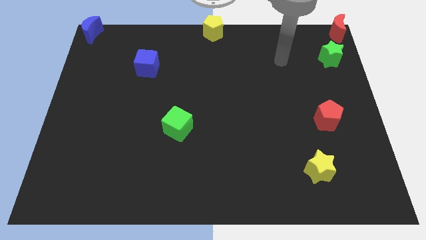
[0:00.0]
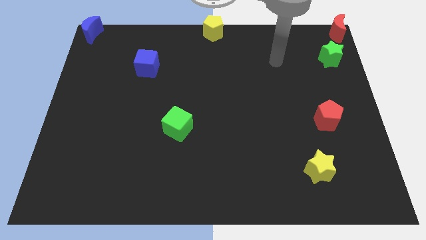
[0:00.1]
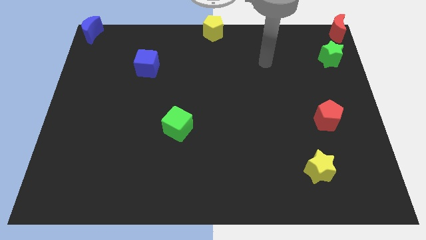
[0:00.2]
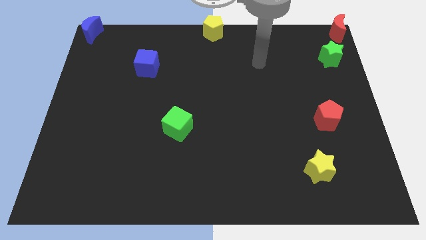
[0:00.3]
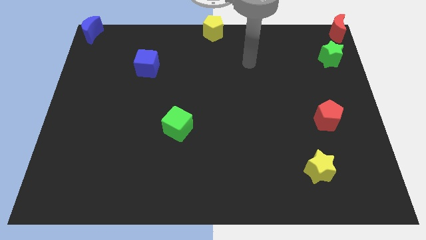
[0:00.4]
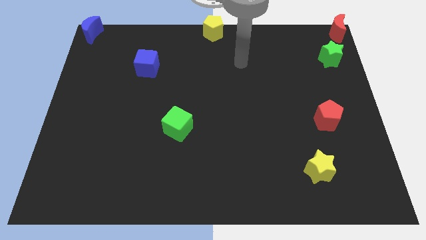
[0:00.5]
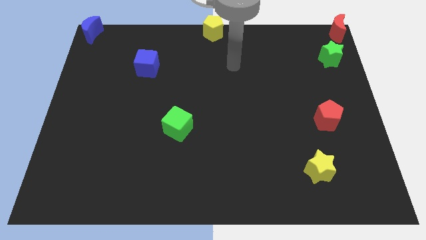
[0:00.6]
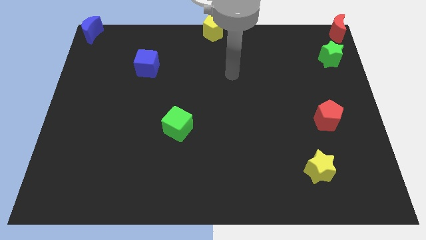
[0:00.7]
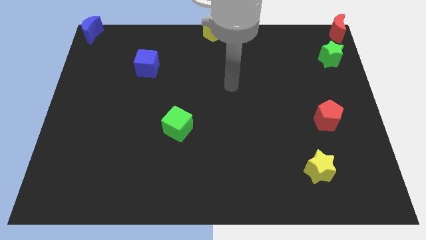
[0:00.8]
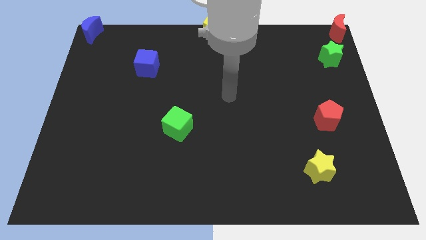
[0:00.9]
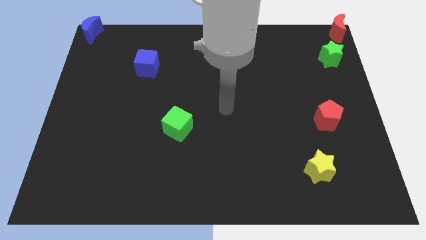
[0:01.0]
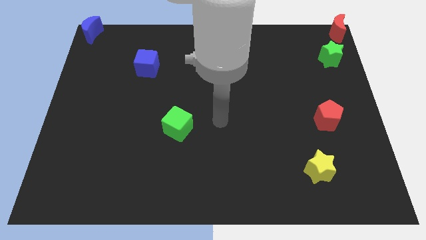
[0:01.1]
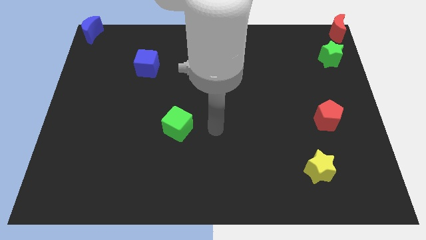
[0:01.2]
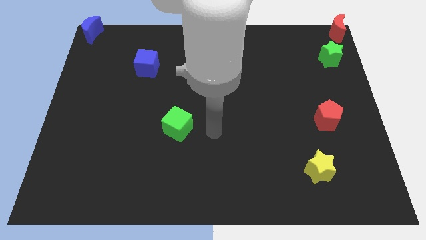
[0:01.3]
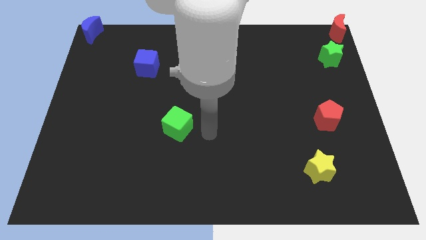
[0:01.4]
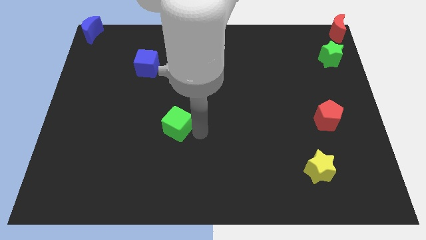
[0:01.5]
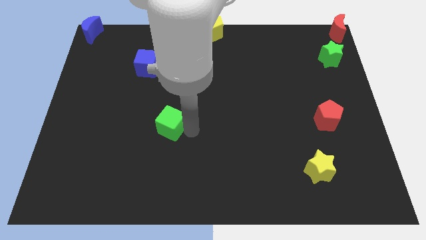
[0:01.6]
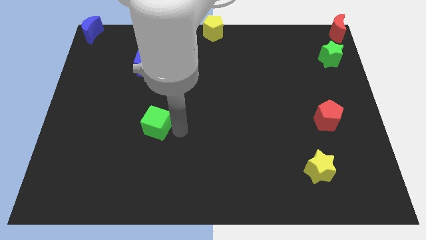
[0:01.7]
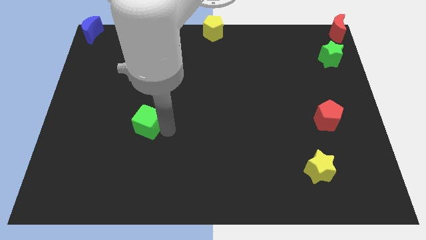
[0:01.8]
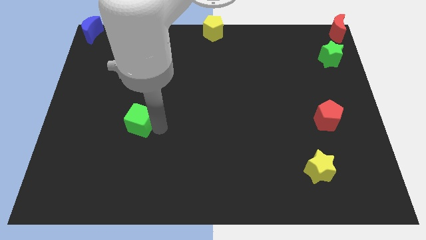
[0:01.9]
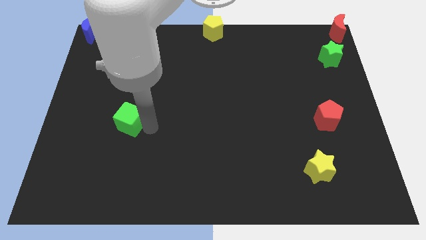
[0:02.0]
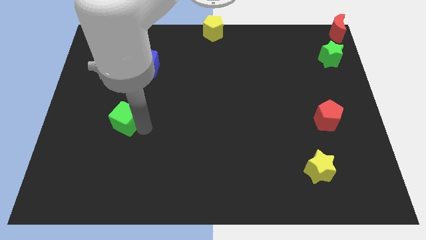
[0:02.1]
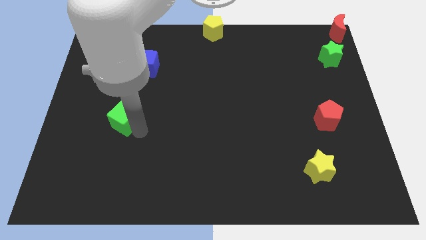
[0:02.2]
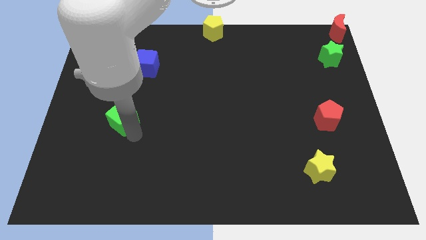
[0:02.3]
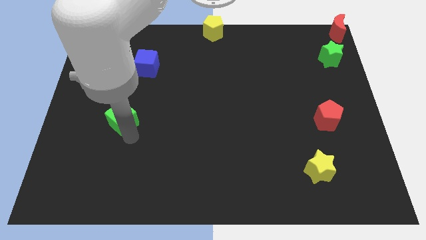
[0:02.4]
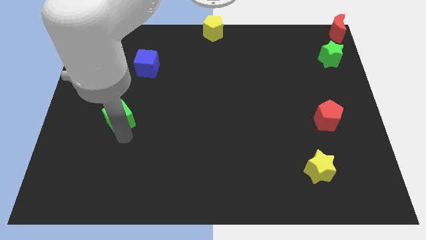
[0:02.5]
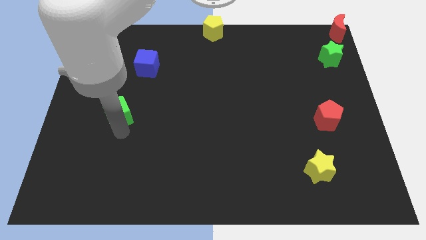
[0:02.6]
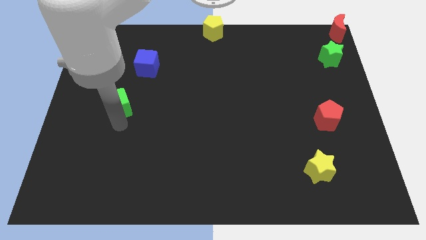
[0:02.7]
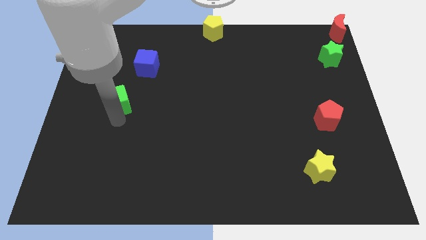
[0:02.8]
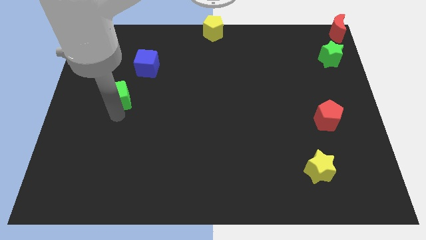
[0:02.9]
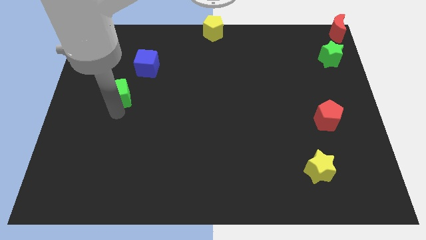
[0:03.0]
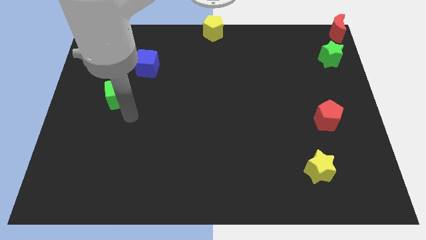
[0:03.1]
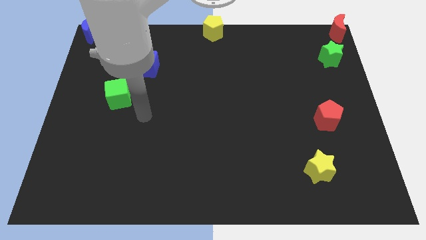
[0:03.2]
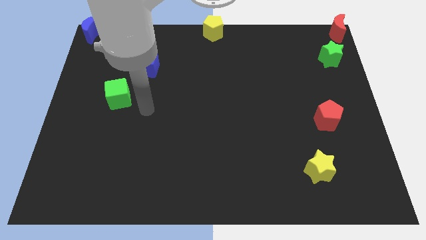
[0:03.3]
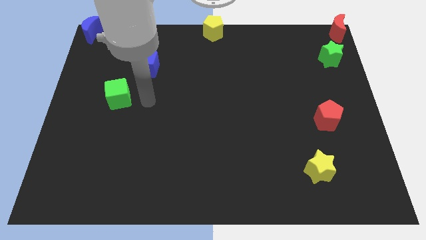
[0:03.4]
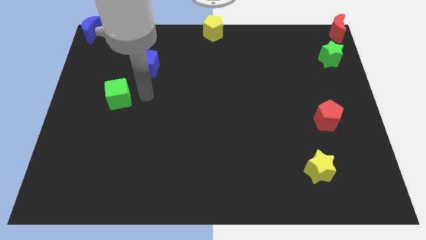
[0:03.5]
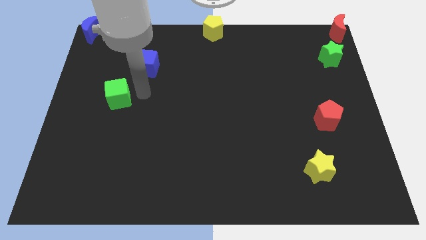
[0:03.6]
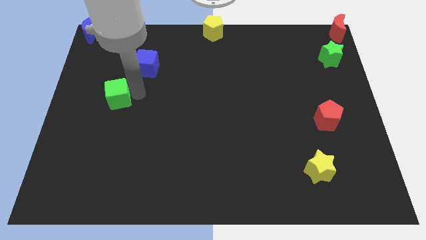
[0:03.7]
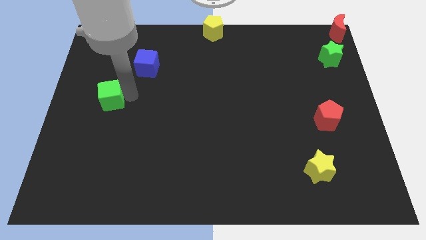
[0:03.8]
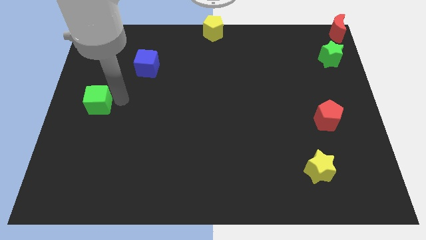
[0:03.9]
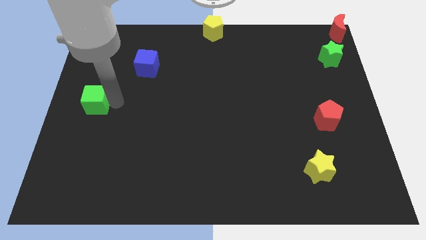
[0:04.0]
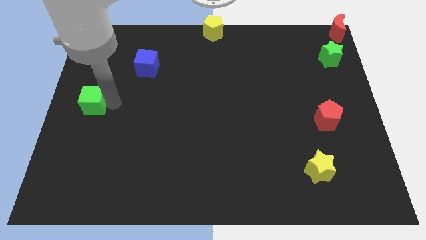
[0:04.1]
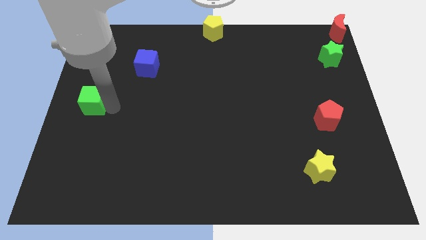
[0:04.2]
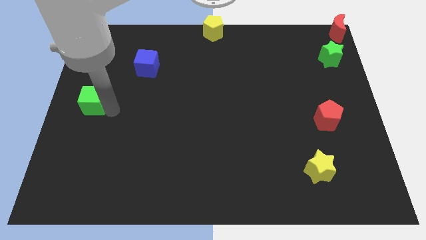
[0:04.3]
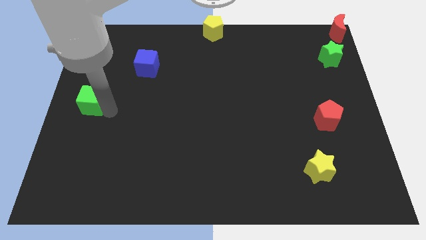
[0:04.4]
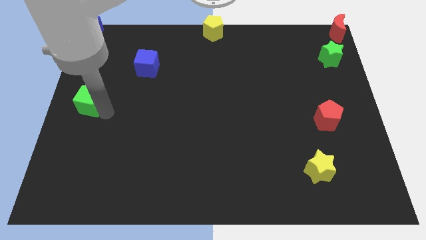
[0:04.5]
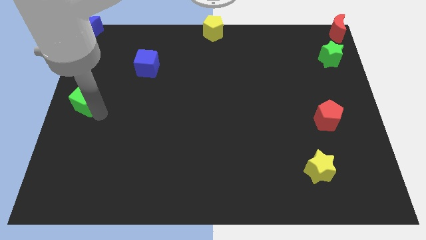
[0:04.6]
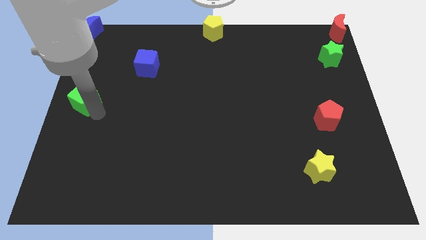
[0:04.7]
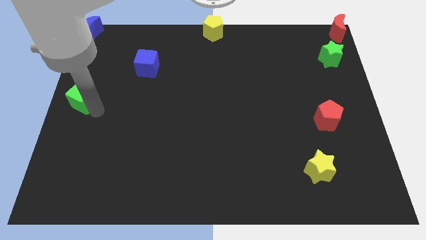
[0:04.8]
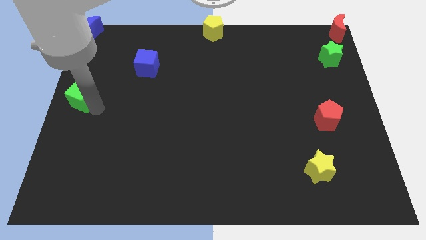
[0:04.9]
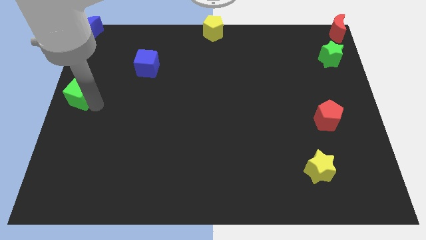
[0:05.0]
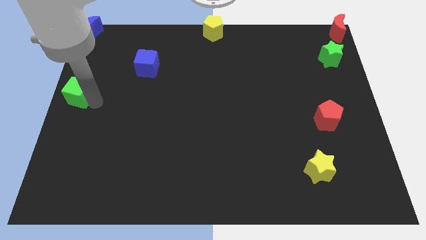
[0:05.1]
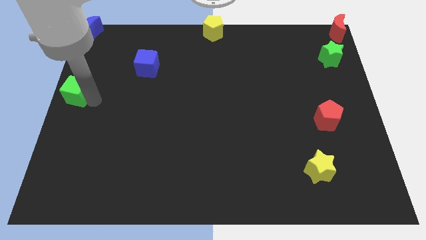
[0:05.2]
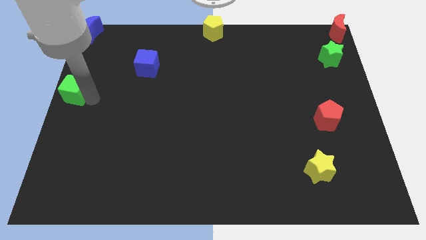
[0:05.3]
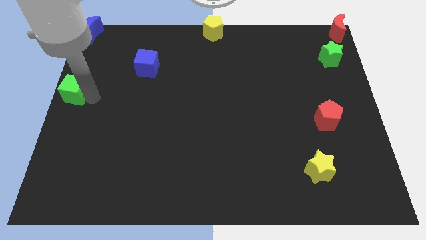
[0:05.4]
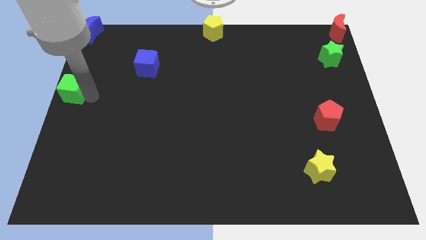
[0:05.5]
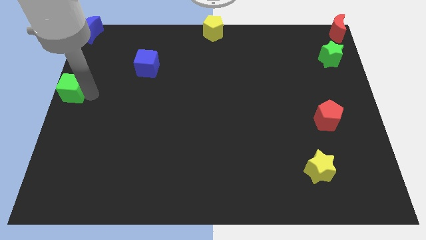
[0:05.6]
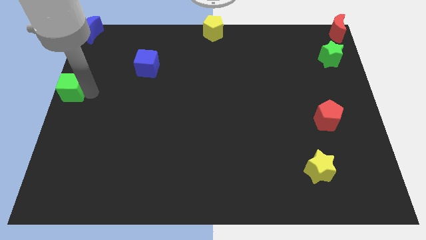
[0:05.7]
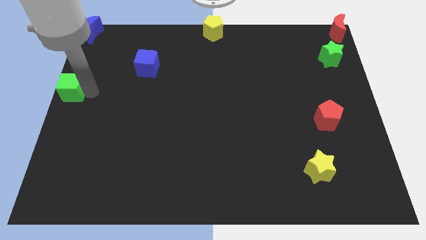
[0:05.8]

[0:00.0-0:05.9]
move the green cube to the center left of the board

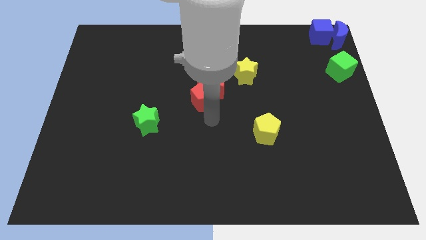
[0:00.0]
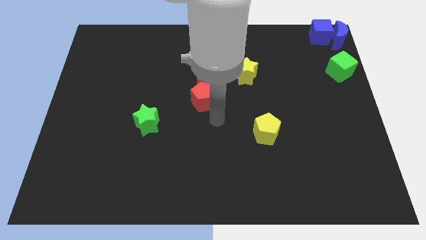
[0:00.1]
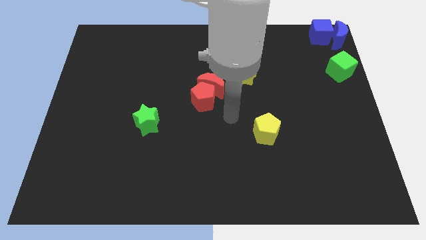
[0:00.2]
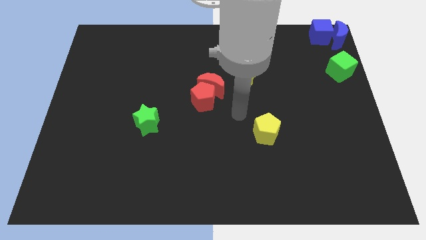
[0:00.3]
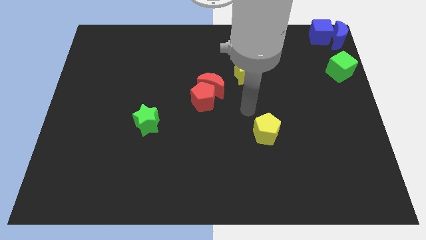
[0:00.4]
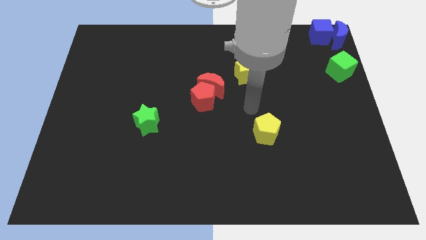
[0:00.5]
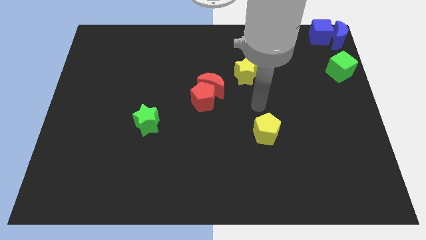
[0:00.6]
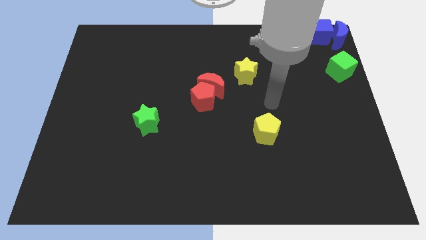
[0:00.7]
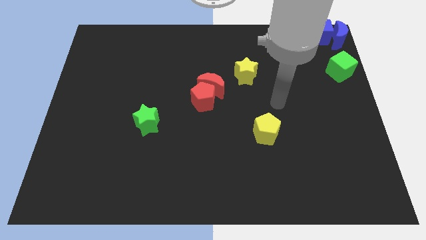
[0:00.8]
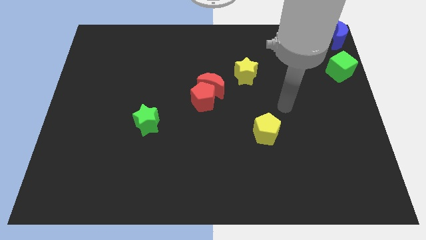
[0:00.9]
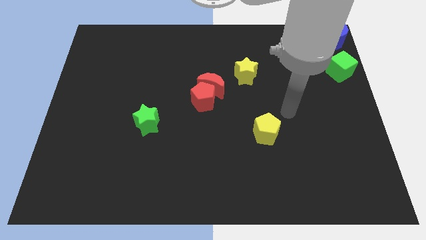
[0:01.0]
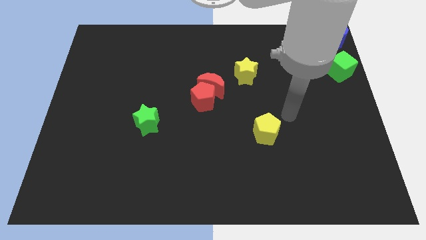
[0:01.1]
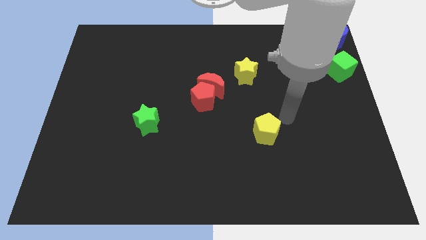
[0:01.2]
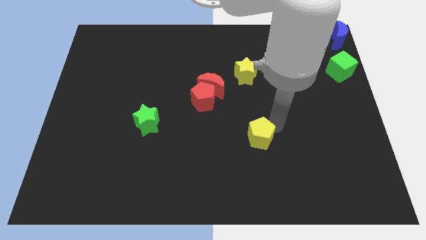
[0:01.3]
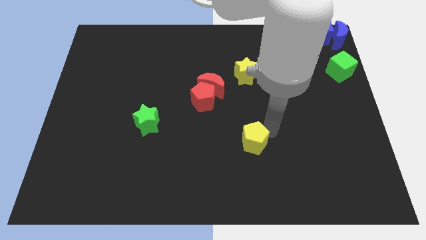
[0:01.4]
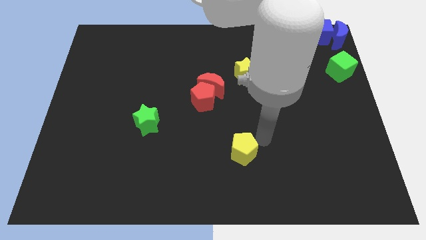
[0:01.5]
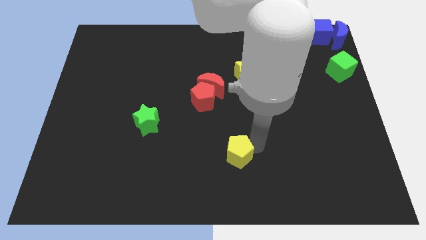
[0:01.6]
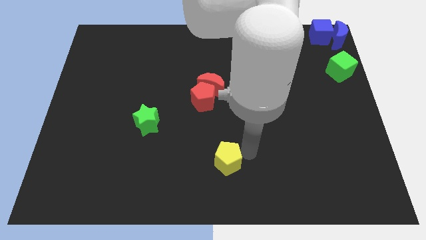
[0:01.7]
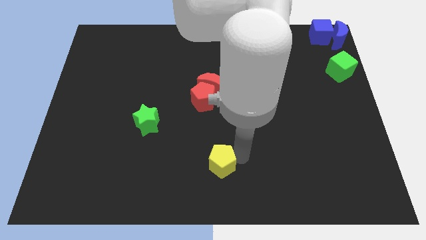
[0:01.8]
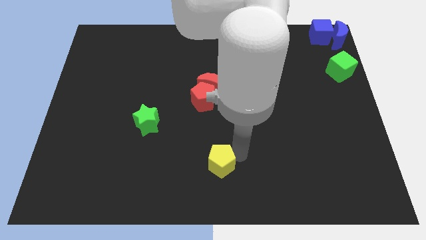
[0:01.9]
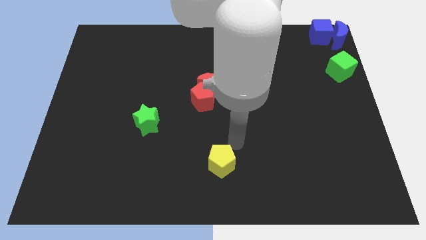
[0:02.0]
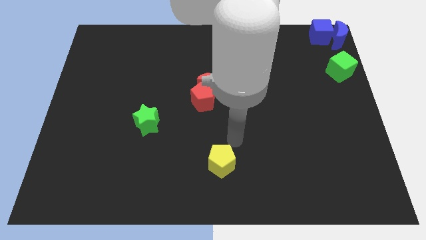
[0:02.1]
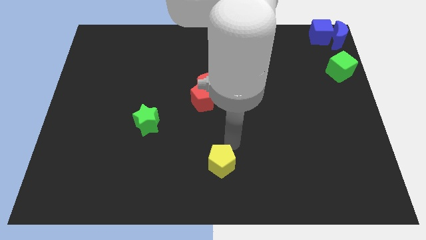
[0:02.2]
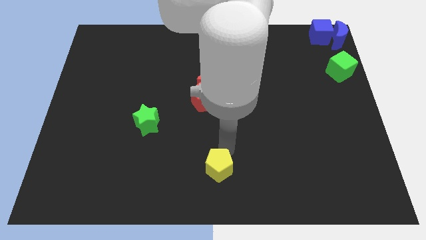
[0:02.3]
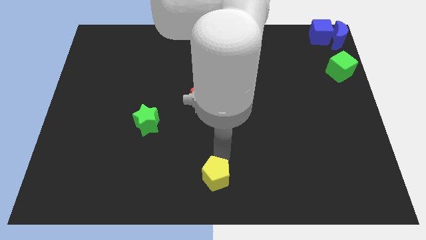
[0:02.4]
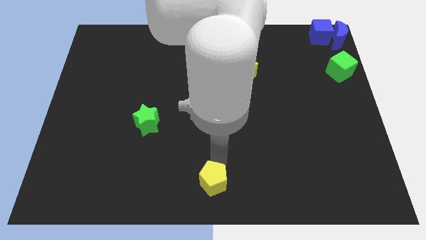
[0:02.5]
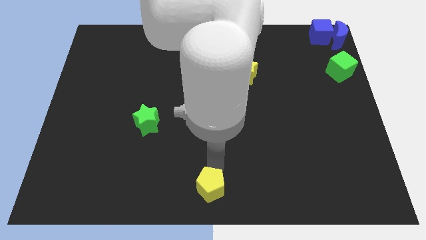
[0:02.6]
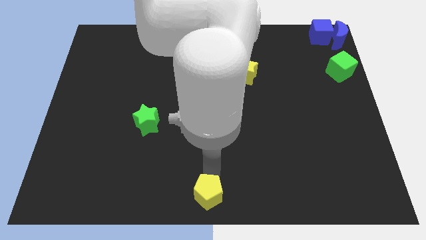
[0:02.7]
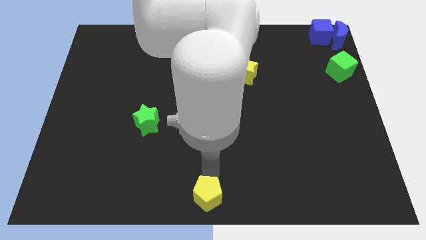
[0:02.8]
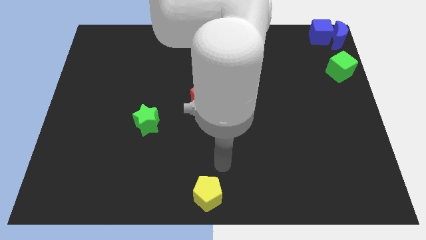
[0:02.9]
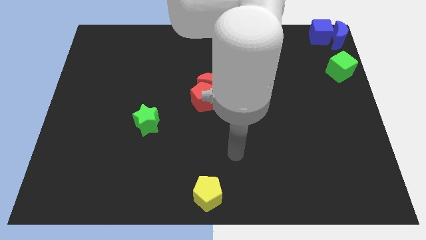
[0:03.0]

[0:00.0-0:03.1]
move the yellow pentagon at the bottom center
